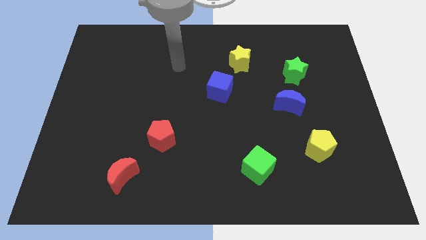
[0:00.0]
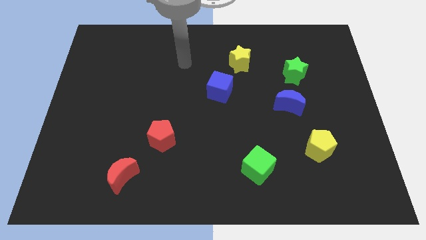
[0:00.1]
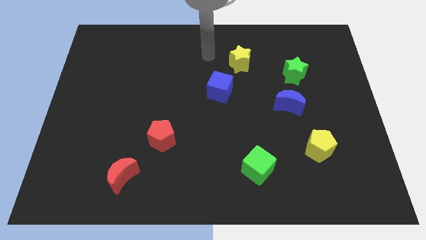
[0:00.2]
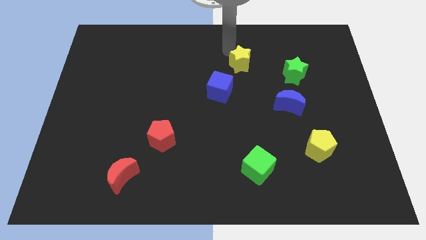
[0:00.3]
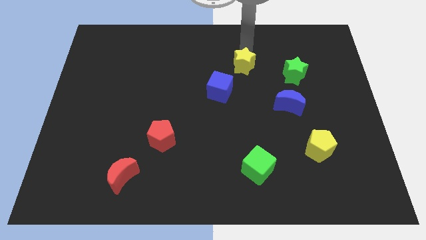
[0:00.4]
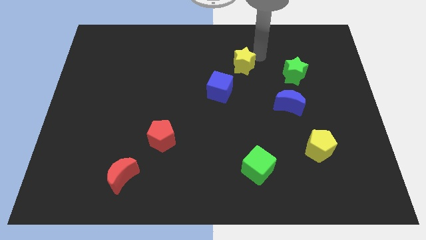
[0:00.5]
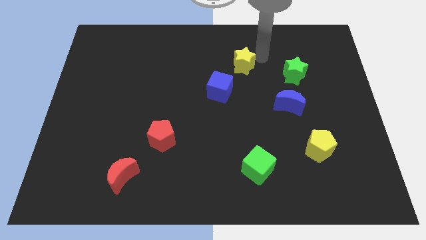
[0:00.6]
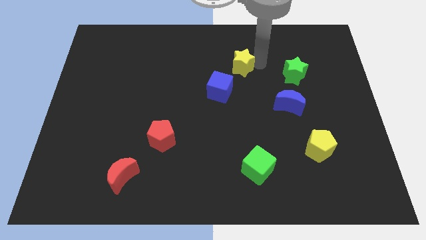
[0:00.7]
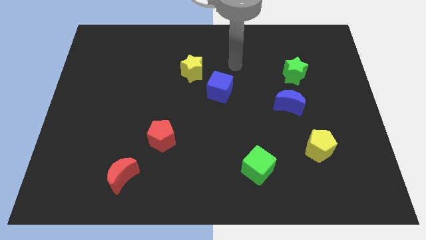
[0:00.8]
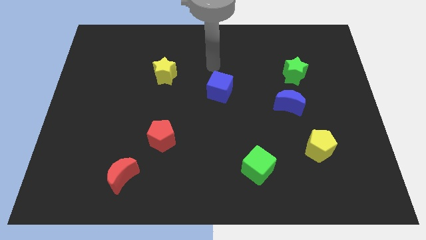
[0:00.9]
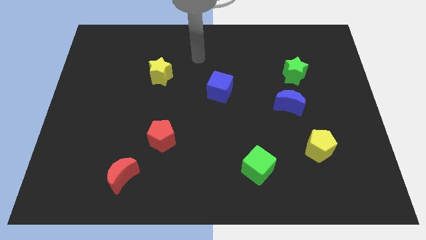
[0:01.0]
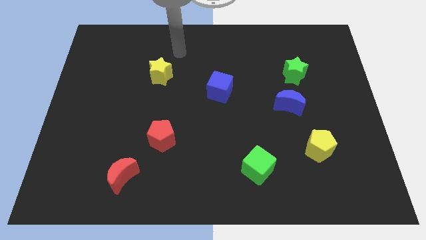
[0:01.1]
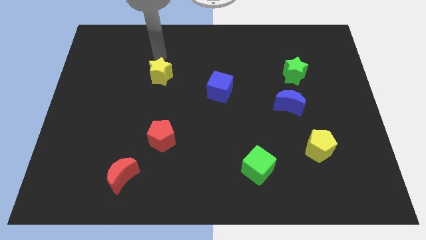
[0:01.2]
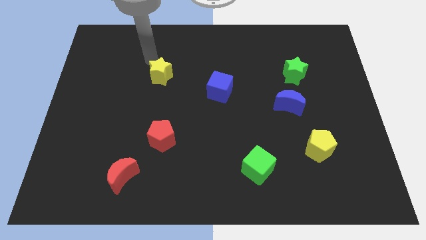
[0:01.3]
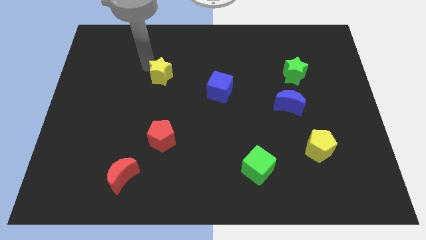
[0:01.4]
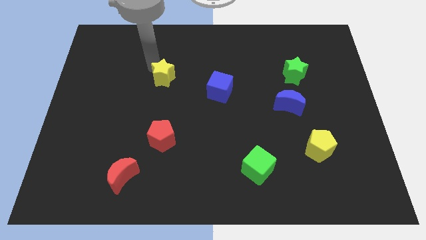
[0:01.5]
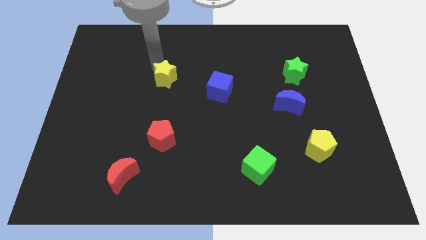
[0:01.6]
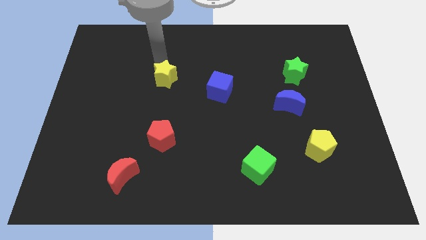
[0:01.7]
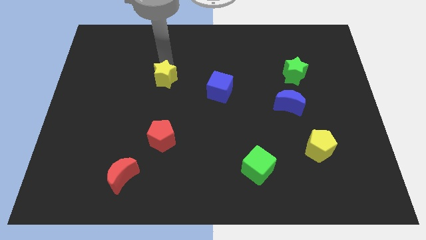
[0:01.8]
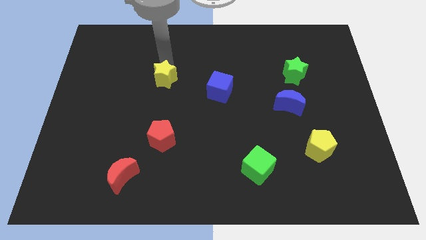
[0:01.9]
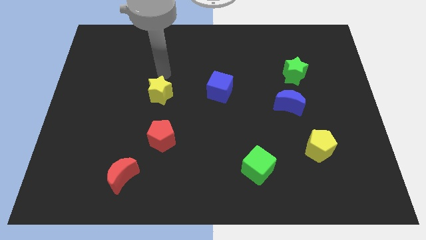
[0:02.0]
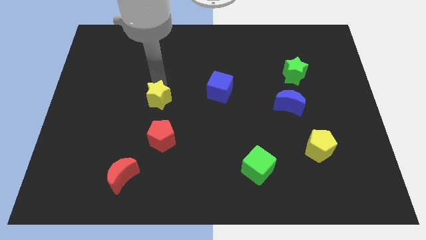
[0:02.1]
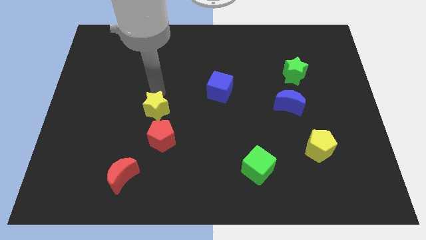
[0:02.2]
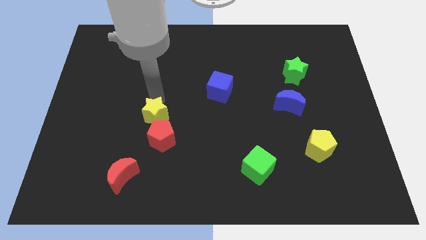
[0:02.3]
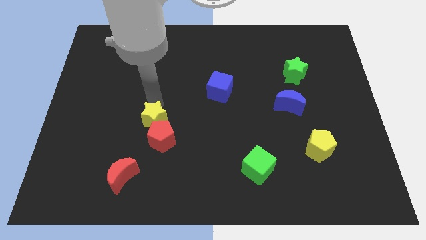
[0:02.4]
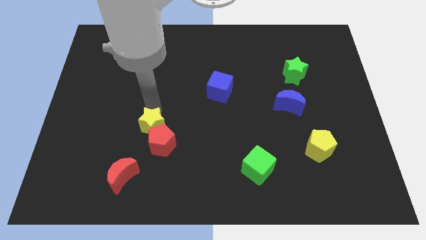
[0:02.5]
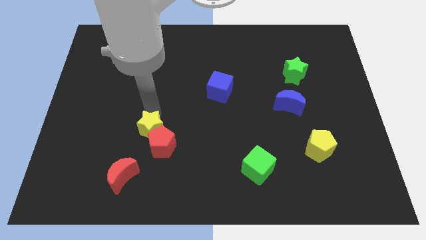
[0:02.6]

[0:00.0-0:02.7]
put the yellow star close to the red pentagon

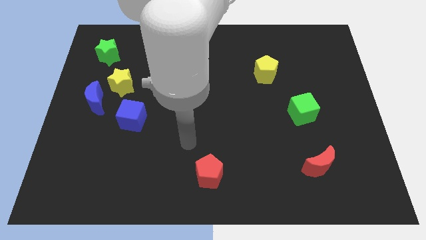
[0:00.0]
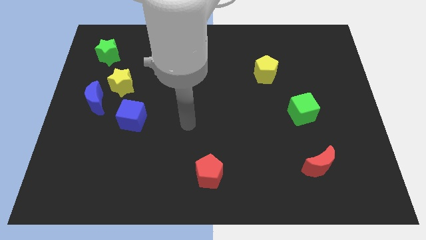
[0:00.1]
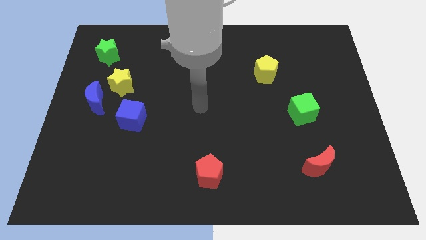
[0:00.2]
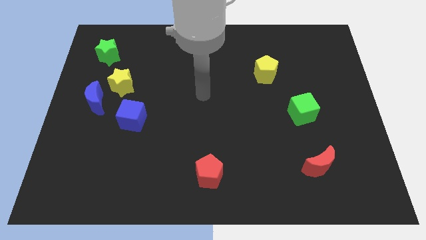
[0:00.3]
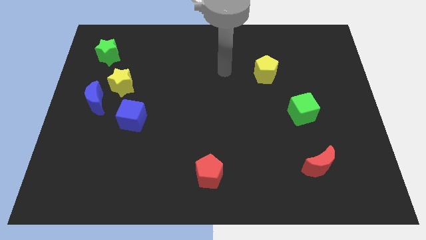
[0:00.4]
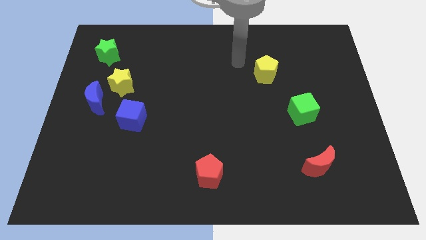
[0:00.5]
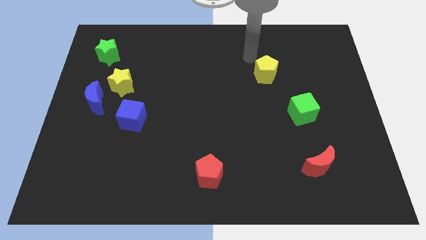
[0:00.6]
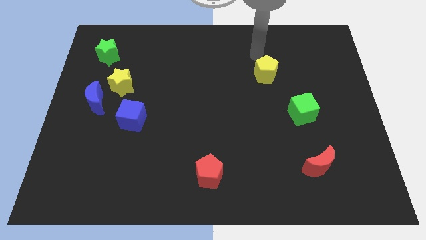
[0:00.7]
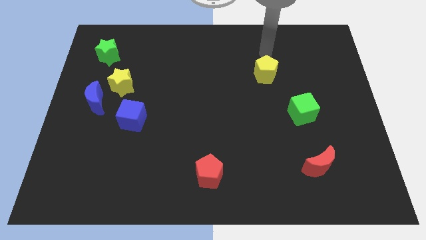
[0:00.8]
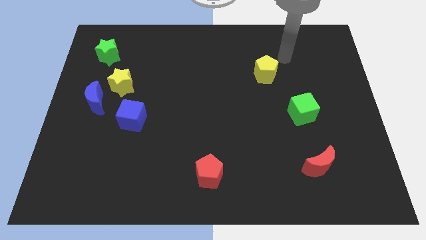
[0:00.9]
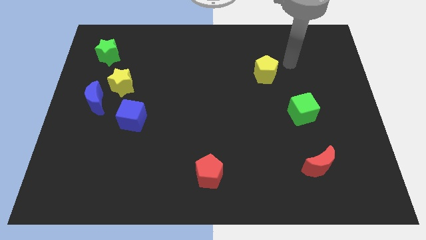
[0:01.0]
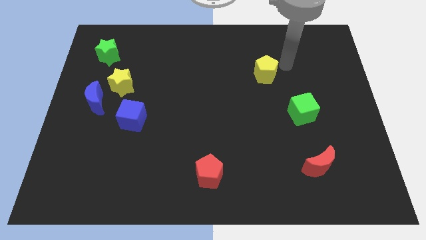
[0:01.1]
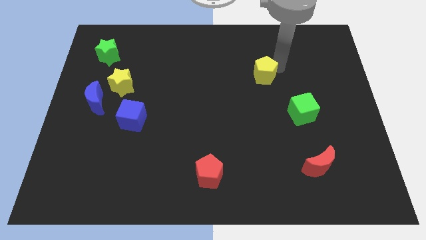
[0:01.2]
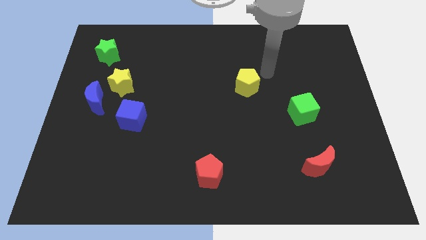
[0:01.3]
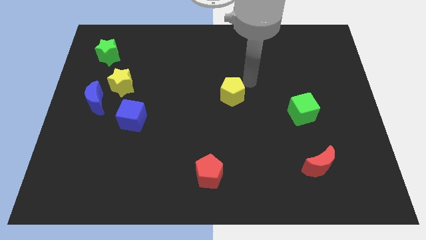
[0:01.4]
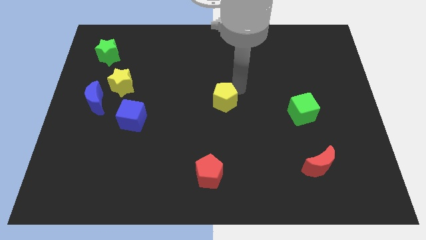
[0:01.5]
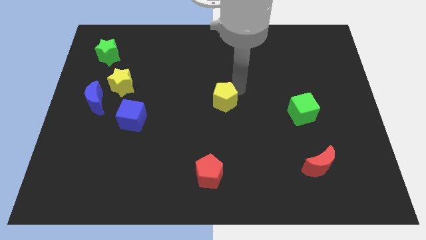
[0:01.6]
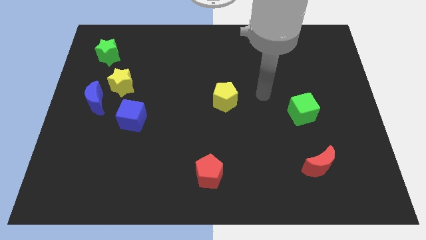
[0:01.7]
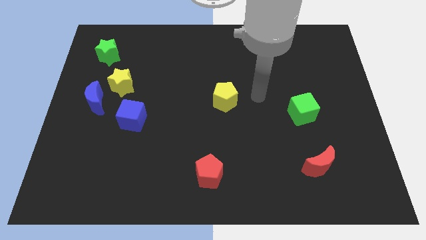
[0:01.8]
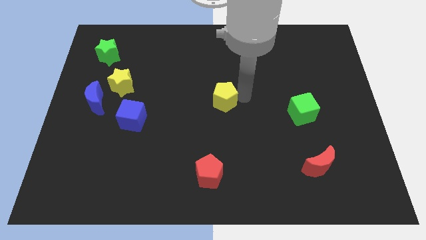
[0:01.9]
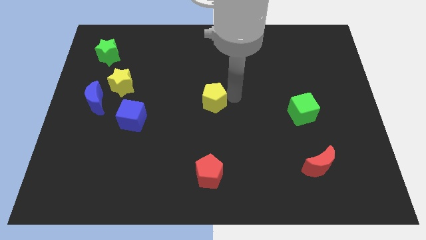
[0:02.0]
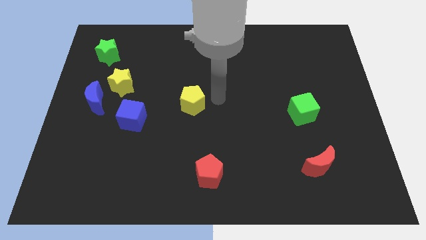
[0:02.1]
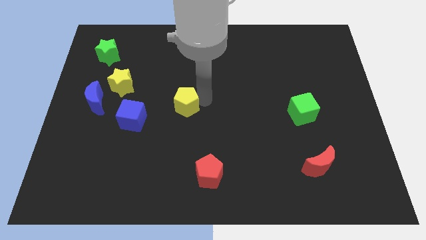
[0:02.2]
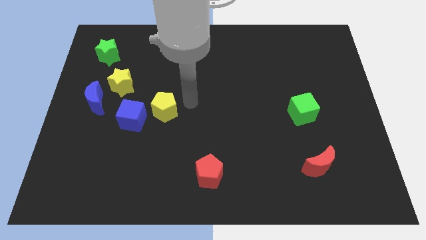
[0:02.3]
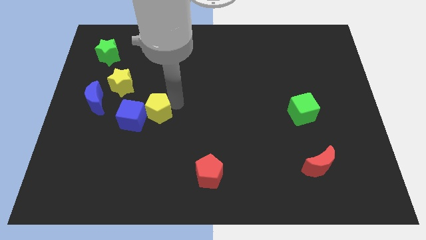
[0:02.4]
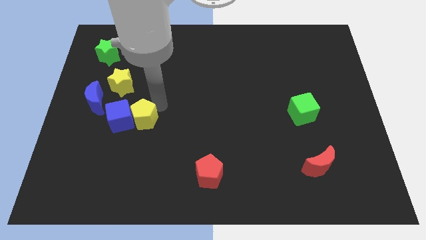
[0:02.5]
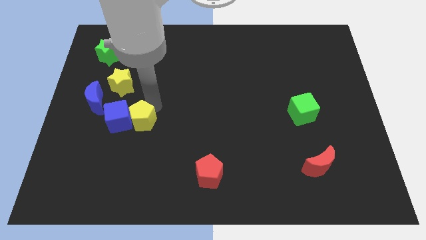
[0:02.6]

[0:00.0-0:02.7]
slide the yellow pentagon close to the blue cube

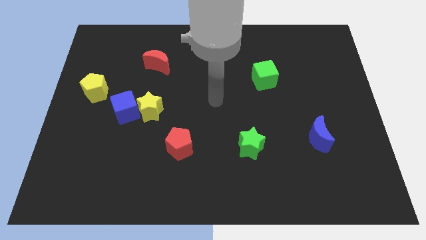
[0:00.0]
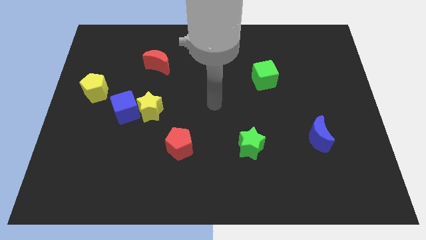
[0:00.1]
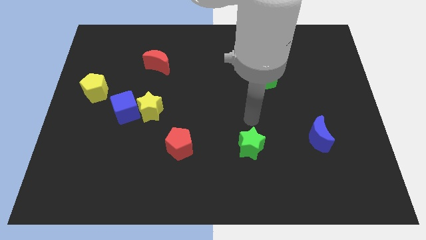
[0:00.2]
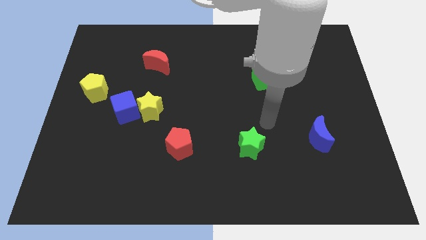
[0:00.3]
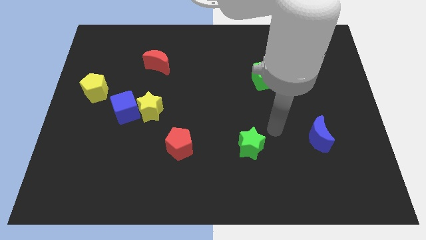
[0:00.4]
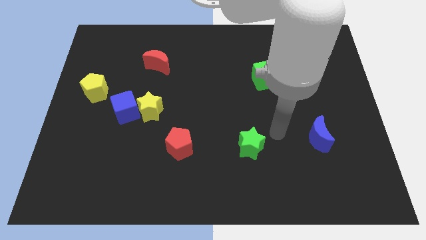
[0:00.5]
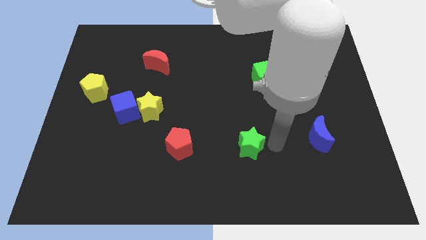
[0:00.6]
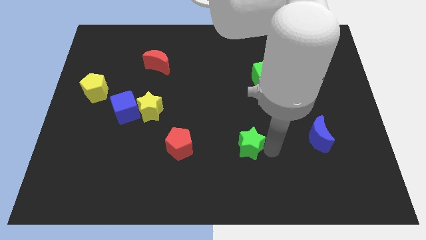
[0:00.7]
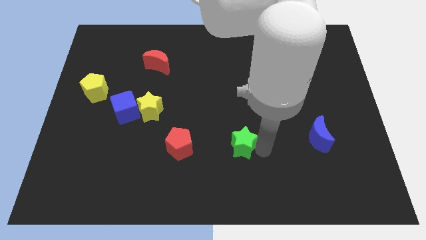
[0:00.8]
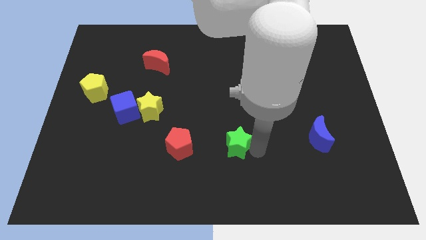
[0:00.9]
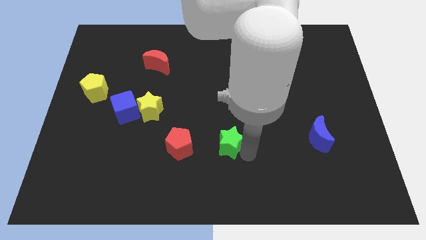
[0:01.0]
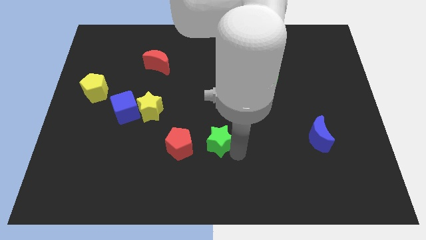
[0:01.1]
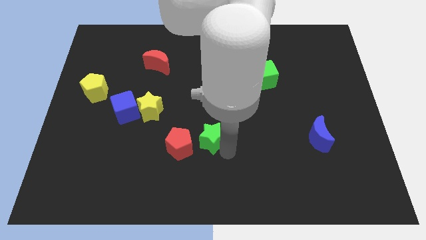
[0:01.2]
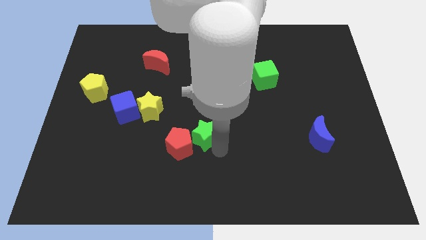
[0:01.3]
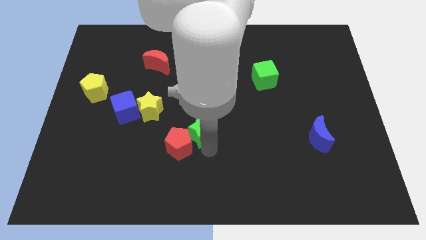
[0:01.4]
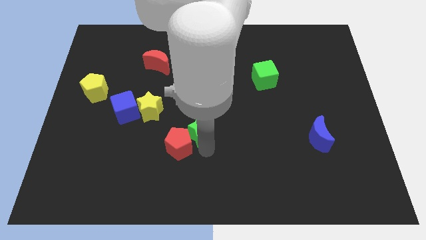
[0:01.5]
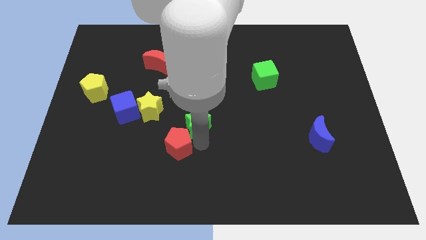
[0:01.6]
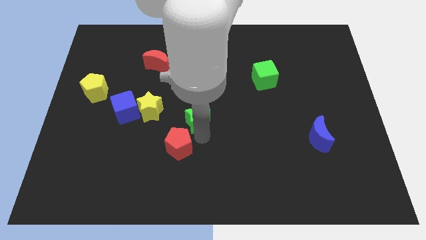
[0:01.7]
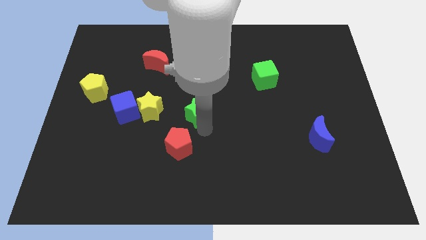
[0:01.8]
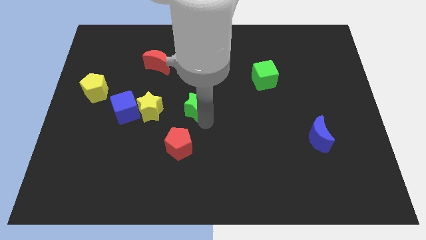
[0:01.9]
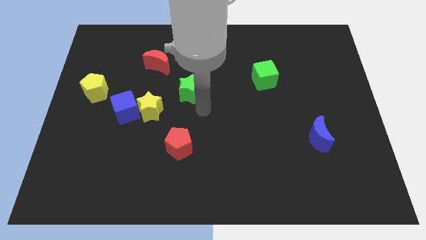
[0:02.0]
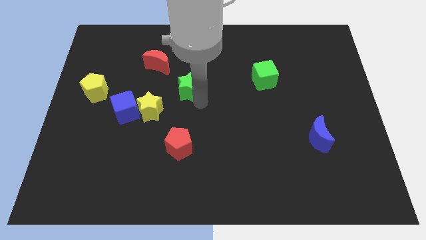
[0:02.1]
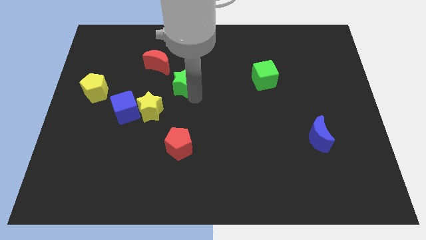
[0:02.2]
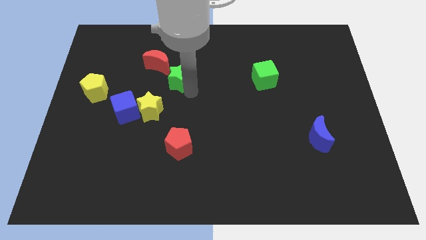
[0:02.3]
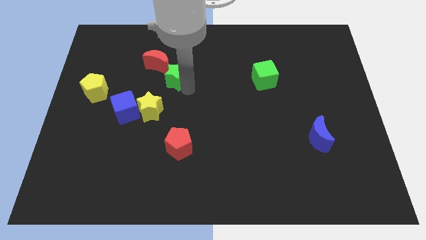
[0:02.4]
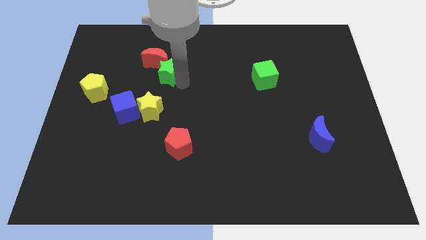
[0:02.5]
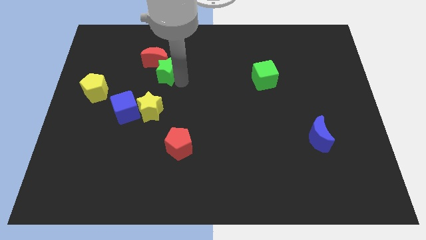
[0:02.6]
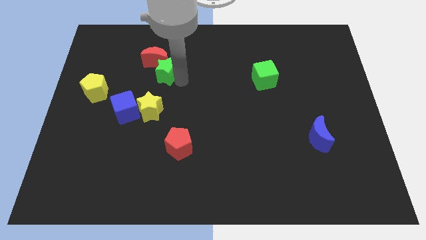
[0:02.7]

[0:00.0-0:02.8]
put the green star towards the red moon

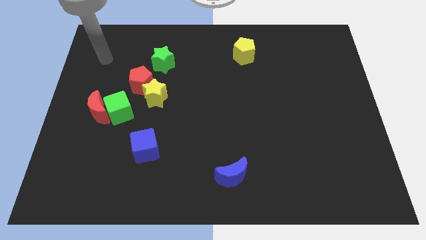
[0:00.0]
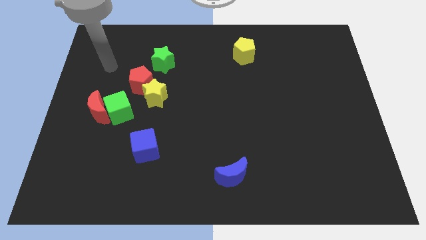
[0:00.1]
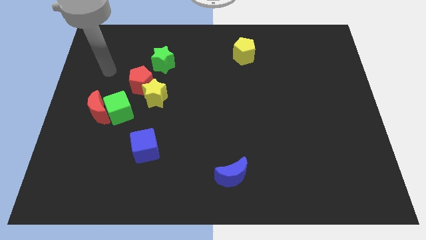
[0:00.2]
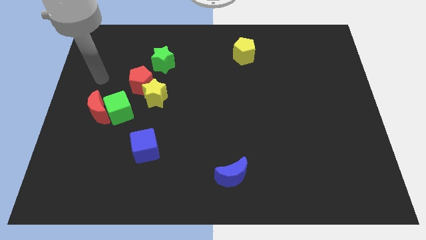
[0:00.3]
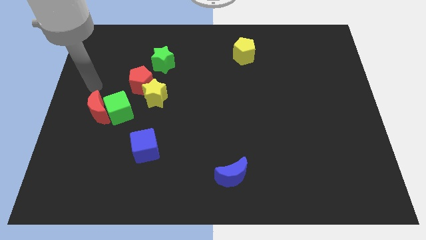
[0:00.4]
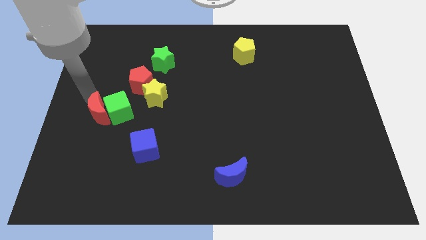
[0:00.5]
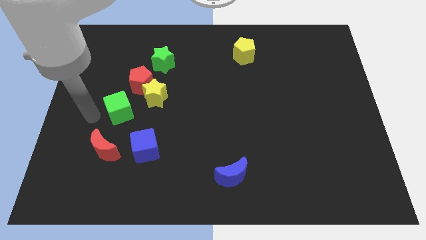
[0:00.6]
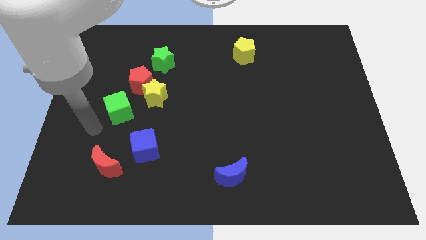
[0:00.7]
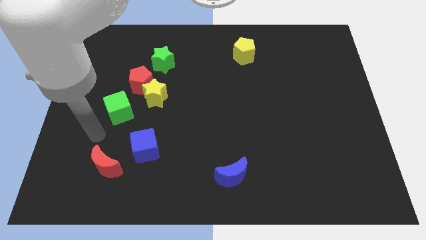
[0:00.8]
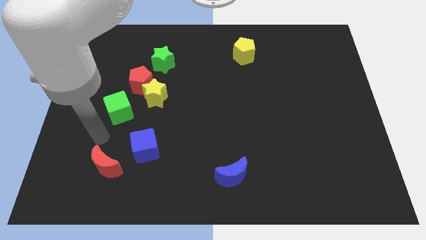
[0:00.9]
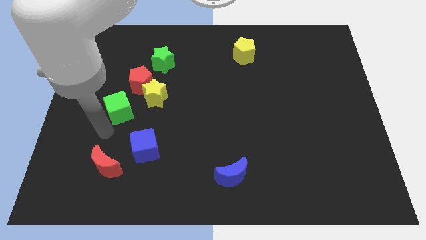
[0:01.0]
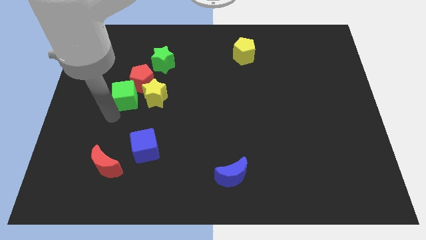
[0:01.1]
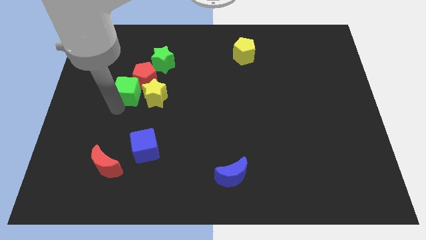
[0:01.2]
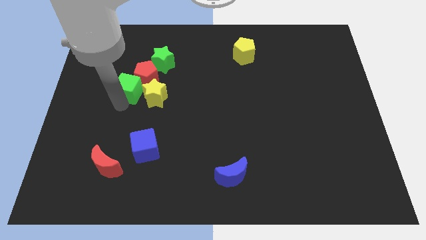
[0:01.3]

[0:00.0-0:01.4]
slide the green cube towards the red pentagon
